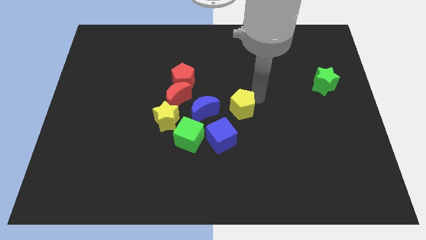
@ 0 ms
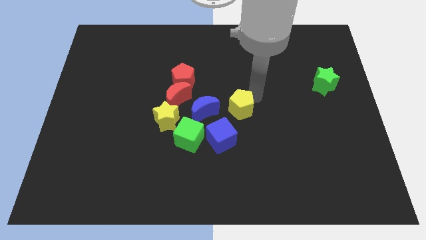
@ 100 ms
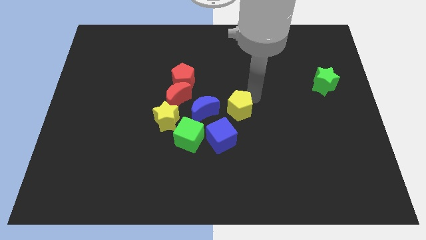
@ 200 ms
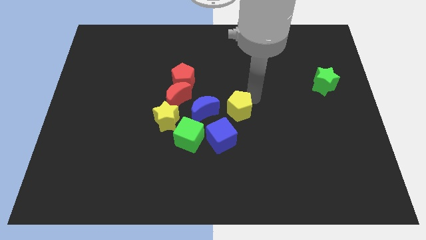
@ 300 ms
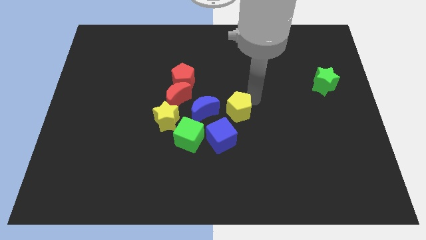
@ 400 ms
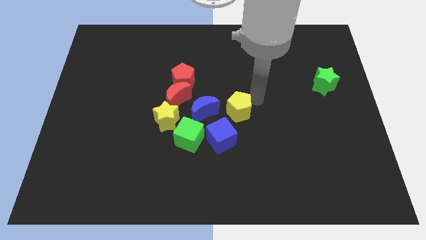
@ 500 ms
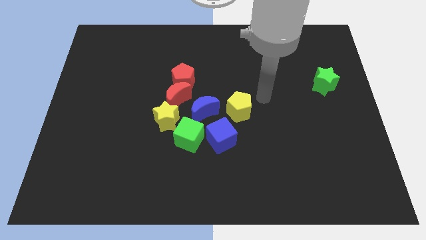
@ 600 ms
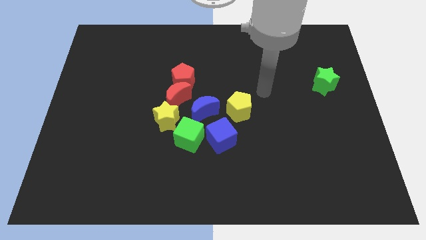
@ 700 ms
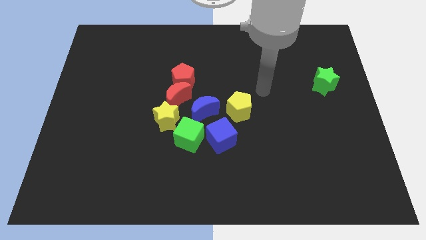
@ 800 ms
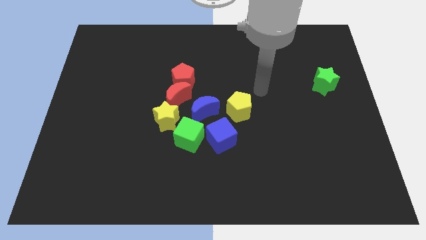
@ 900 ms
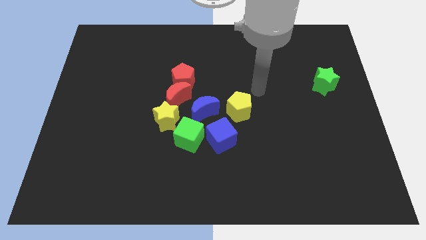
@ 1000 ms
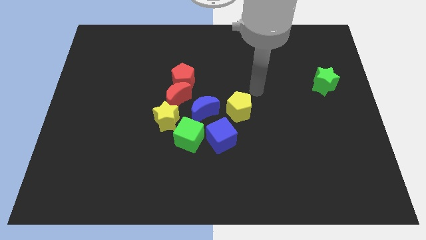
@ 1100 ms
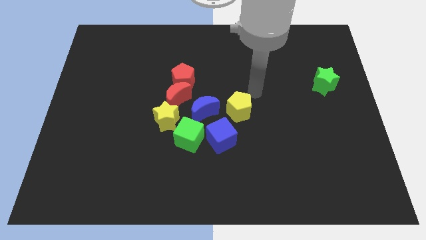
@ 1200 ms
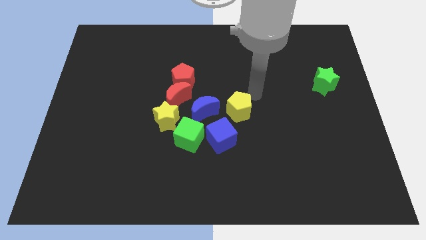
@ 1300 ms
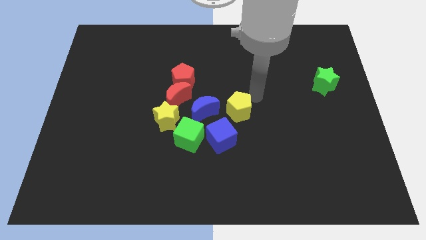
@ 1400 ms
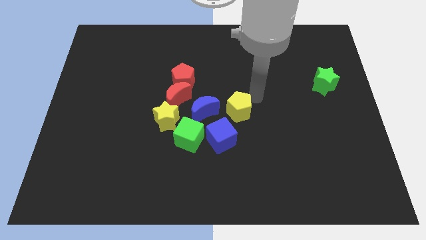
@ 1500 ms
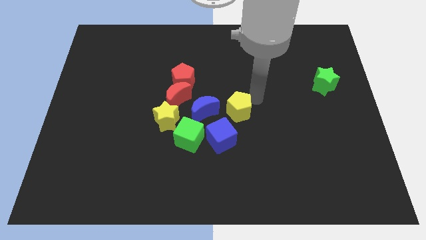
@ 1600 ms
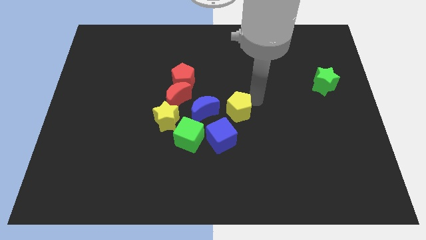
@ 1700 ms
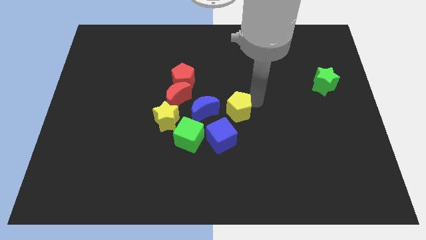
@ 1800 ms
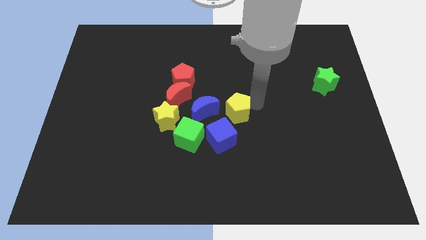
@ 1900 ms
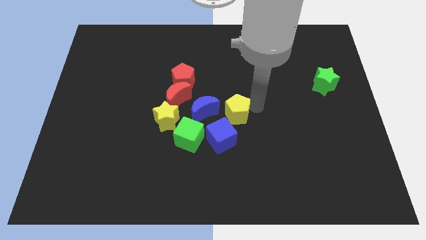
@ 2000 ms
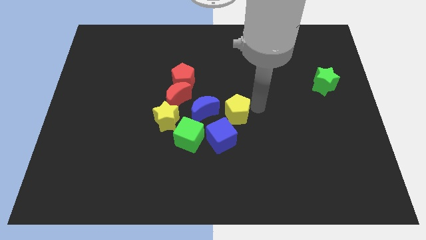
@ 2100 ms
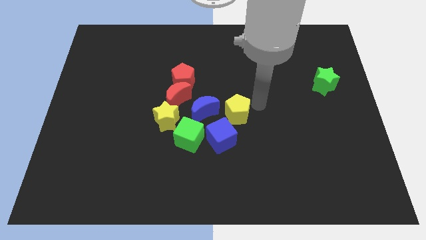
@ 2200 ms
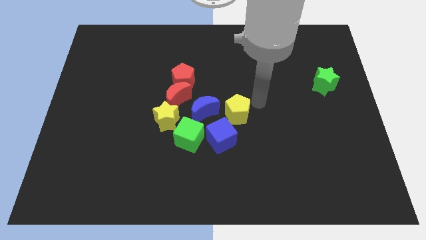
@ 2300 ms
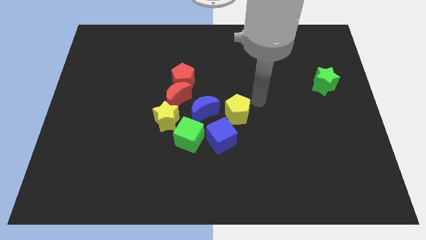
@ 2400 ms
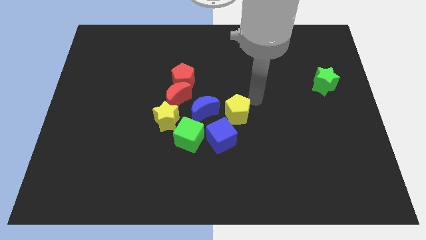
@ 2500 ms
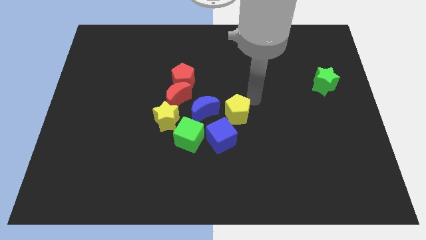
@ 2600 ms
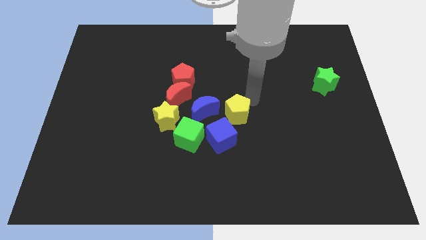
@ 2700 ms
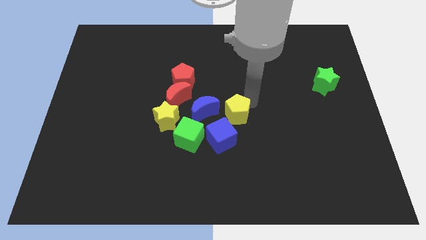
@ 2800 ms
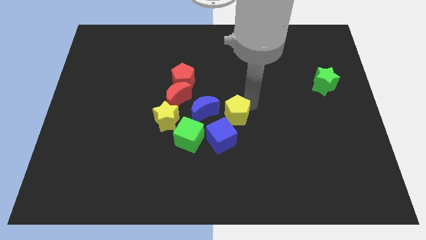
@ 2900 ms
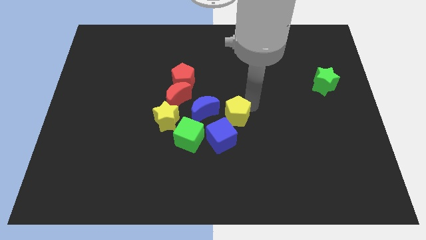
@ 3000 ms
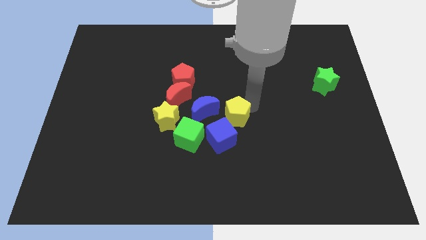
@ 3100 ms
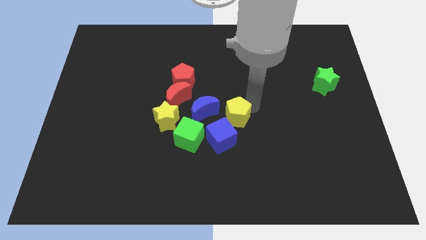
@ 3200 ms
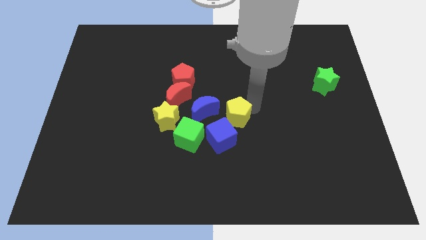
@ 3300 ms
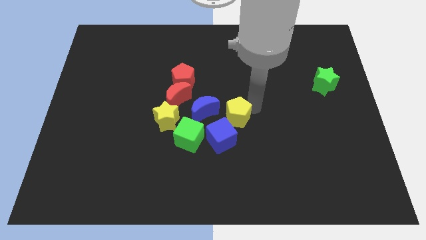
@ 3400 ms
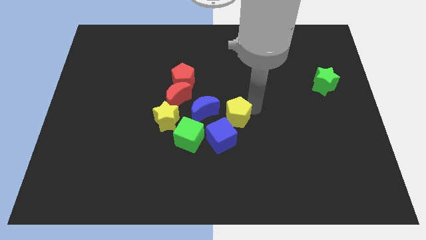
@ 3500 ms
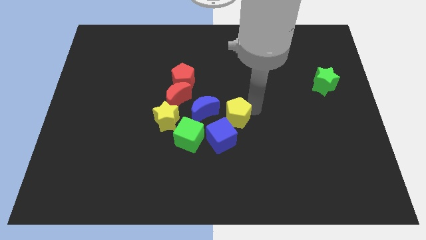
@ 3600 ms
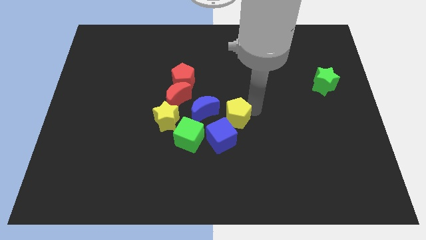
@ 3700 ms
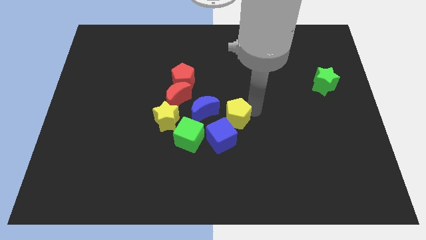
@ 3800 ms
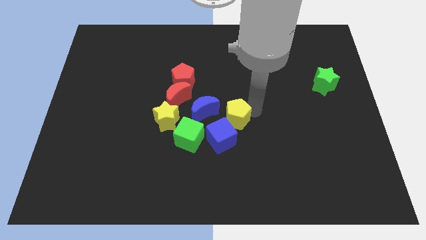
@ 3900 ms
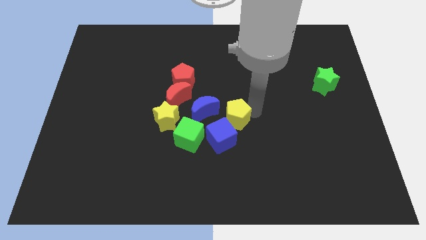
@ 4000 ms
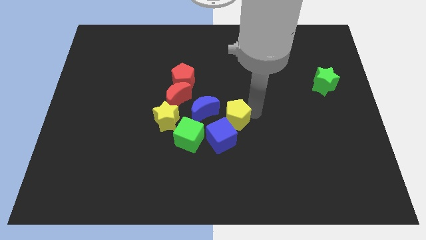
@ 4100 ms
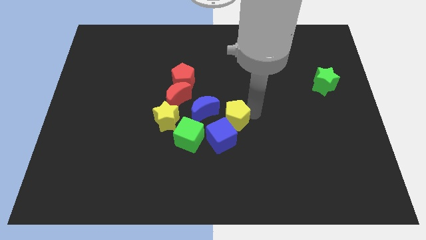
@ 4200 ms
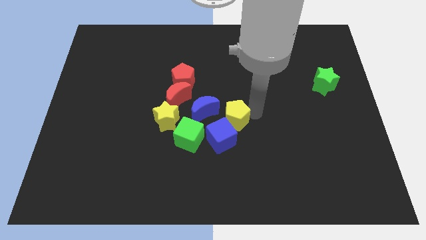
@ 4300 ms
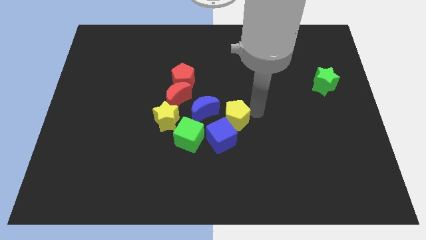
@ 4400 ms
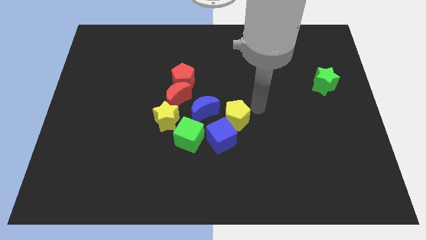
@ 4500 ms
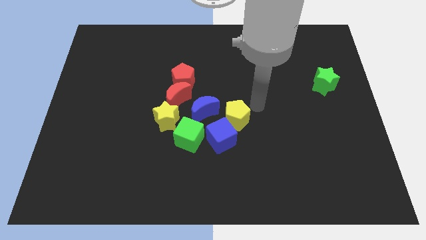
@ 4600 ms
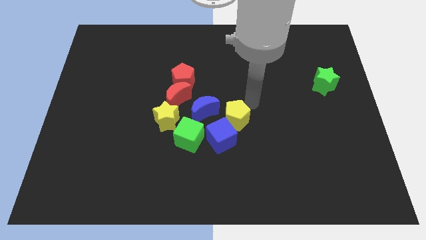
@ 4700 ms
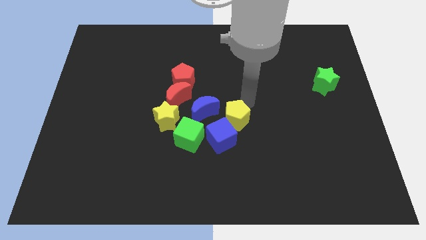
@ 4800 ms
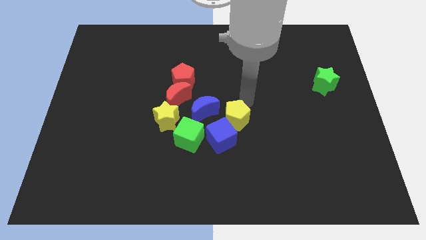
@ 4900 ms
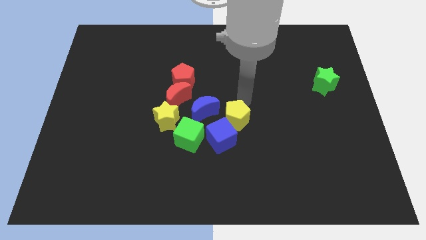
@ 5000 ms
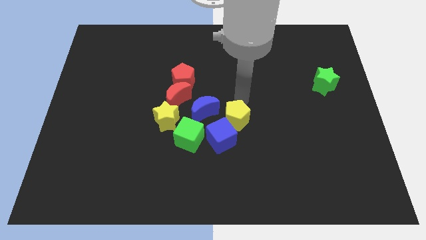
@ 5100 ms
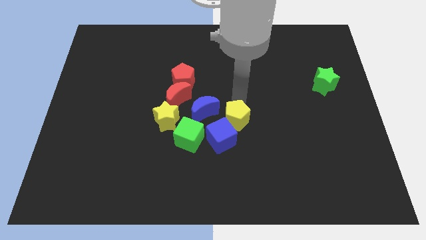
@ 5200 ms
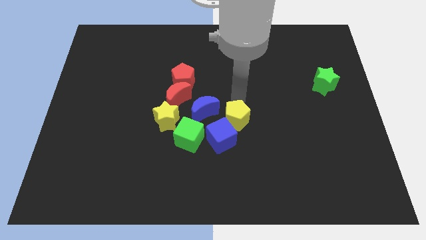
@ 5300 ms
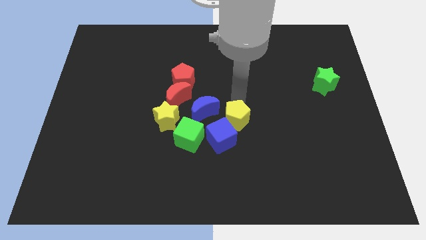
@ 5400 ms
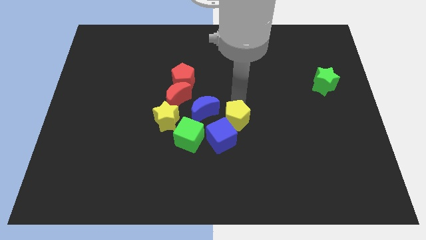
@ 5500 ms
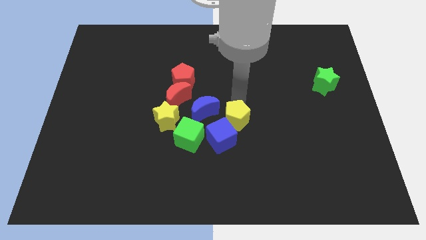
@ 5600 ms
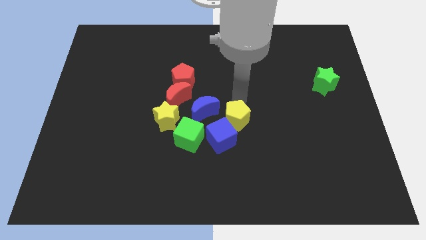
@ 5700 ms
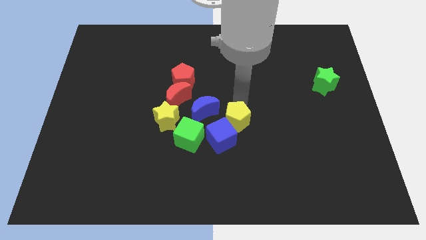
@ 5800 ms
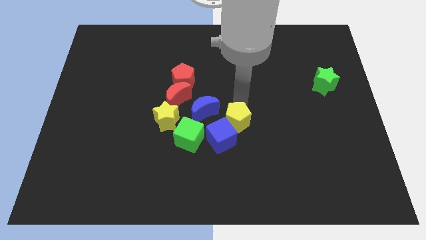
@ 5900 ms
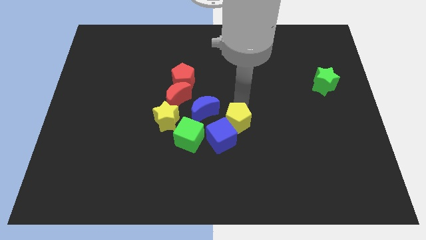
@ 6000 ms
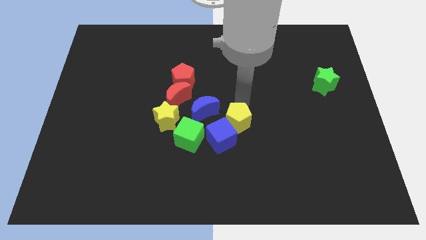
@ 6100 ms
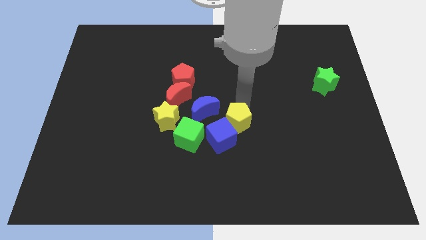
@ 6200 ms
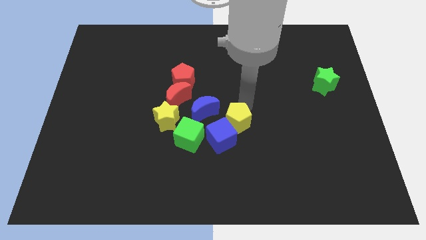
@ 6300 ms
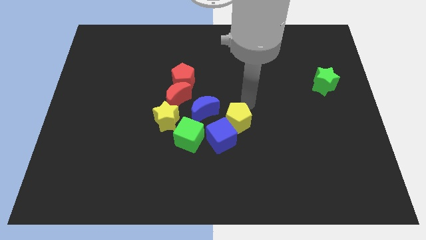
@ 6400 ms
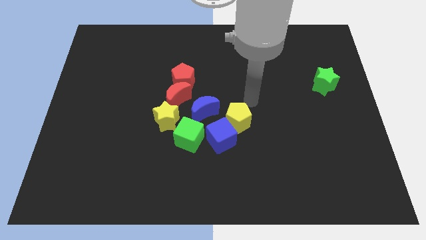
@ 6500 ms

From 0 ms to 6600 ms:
move the yellow pentagon to the right side of the blue cube

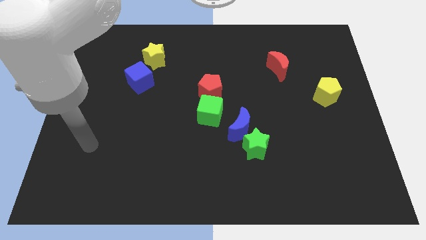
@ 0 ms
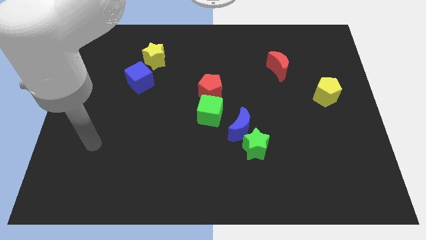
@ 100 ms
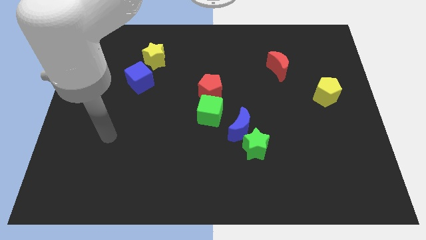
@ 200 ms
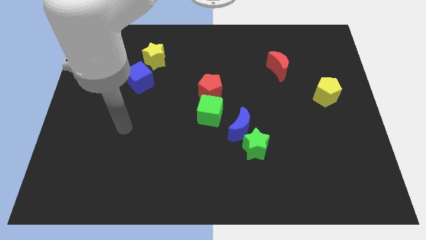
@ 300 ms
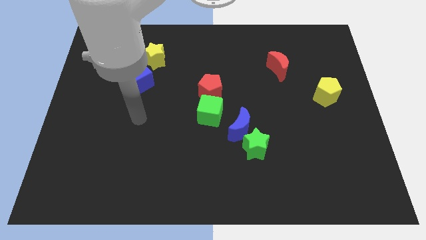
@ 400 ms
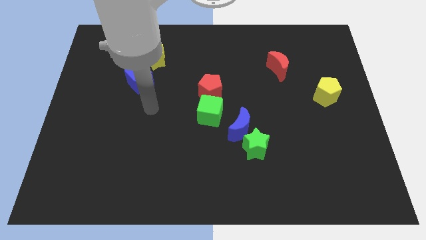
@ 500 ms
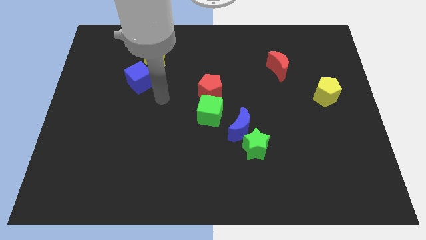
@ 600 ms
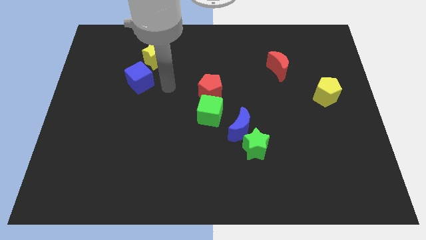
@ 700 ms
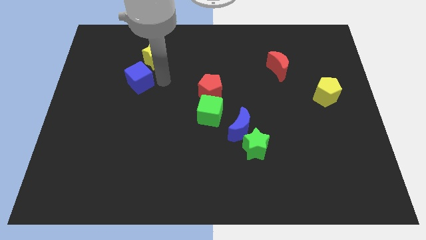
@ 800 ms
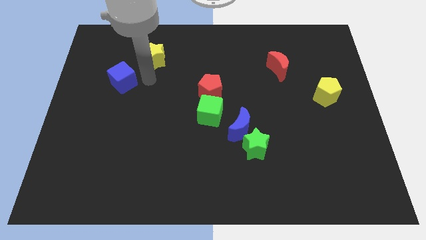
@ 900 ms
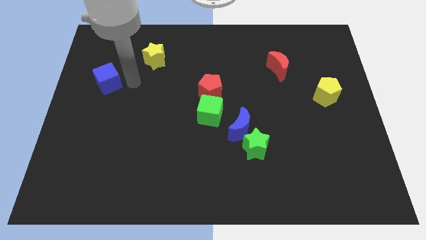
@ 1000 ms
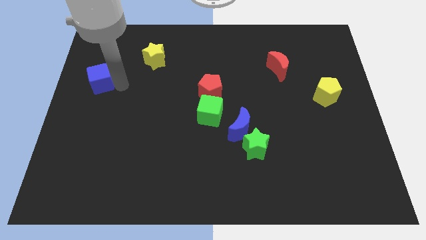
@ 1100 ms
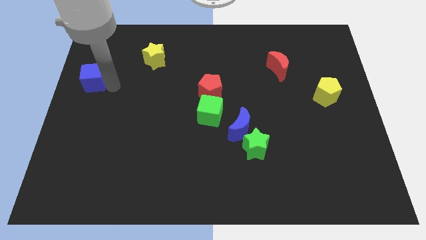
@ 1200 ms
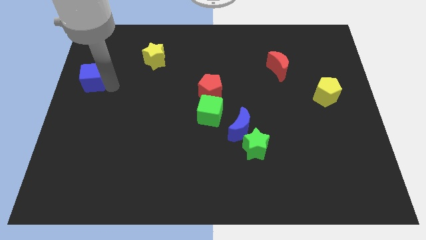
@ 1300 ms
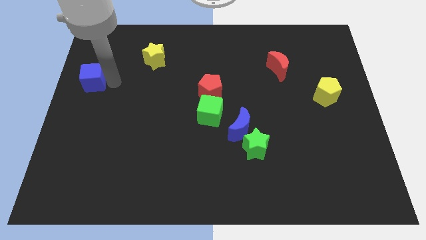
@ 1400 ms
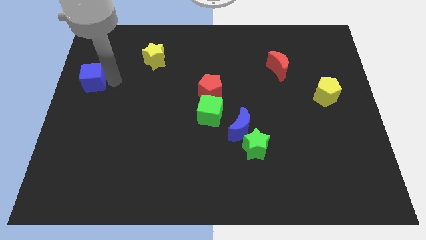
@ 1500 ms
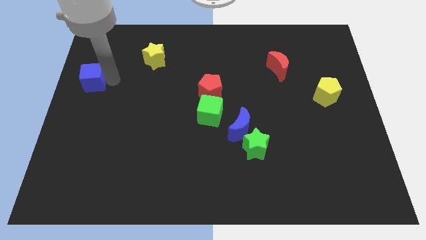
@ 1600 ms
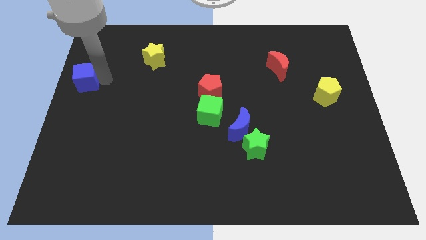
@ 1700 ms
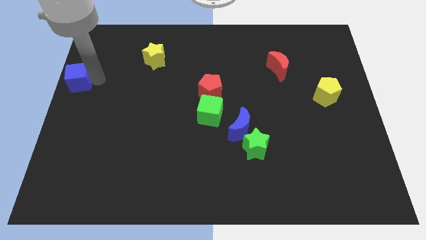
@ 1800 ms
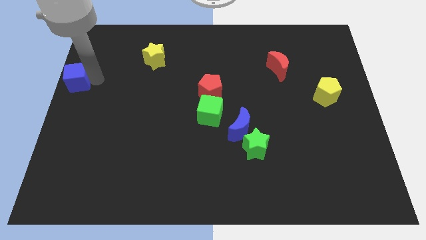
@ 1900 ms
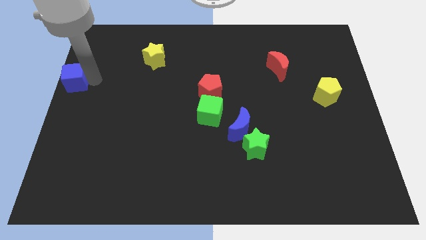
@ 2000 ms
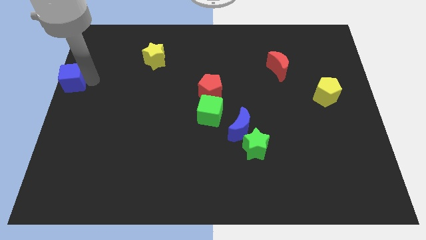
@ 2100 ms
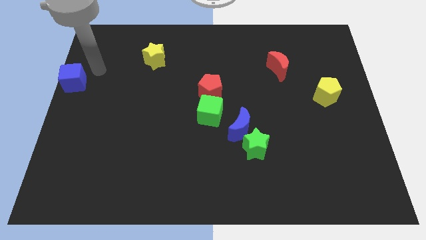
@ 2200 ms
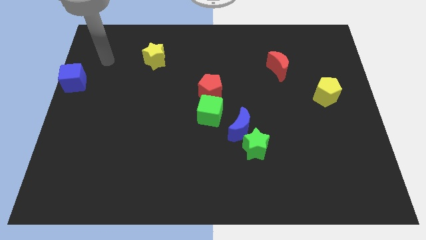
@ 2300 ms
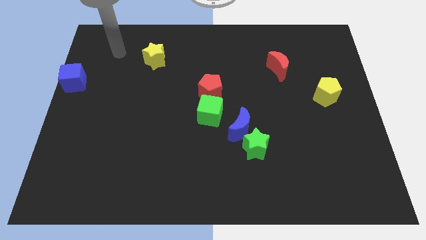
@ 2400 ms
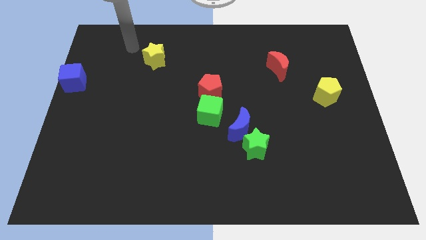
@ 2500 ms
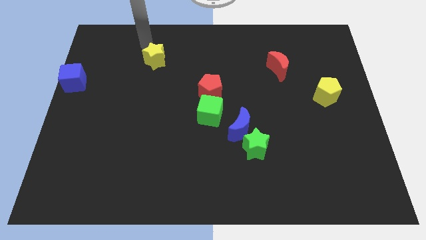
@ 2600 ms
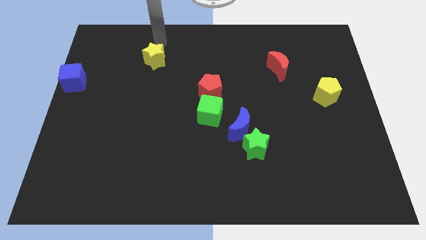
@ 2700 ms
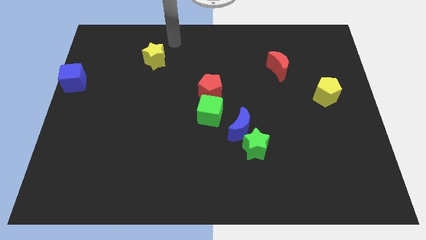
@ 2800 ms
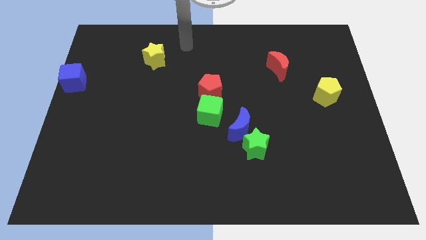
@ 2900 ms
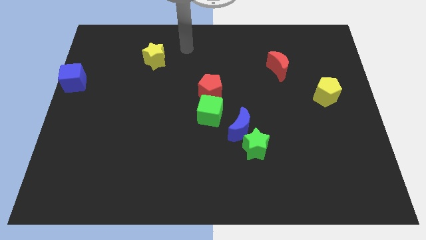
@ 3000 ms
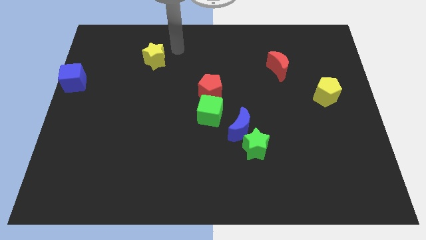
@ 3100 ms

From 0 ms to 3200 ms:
move the blue cube towards the left side
